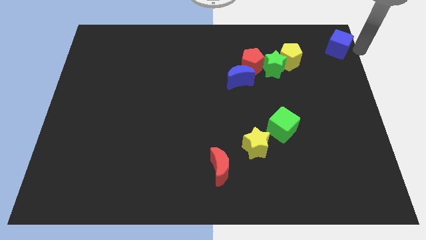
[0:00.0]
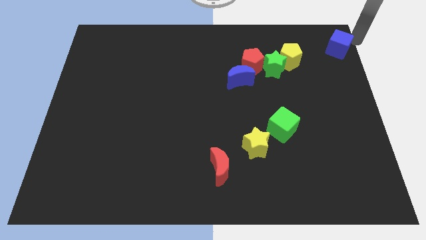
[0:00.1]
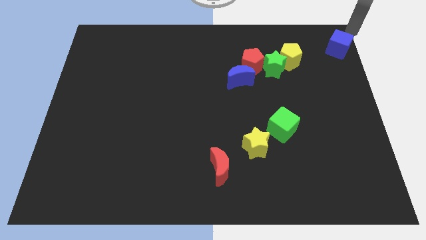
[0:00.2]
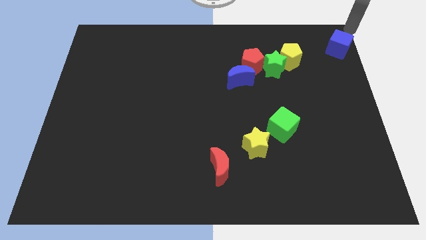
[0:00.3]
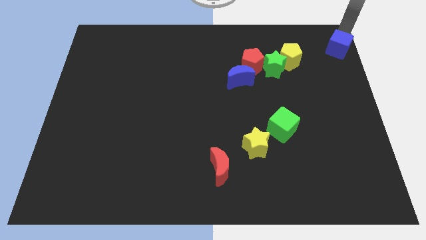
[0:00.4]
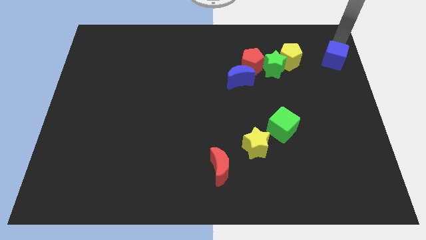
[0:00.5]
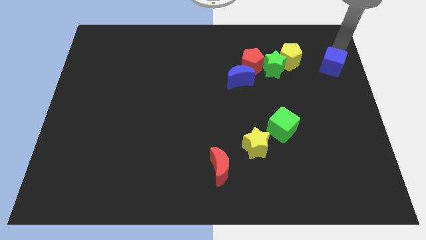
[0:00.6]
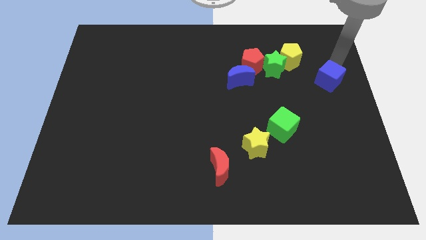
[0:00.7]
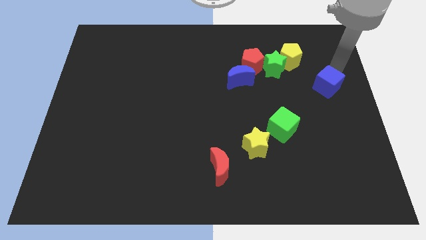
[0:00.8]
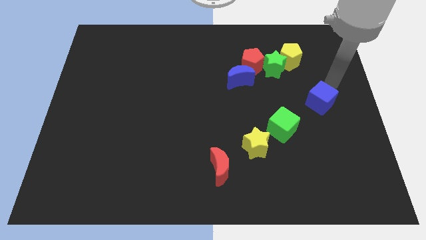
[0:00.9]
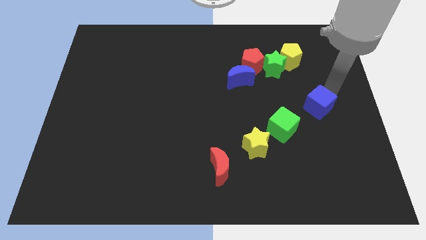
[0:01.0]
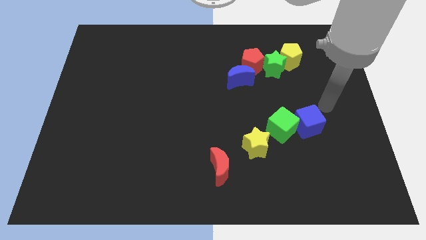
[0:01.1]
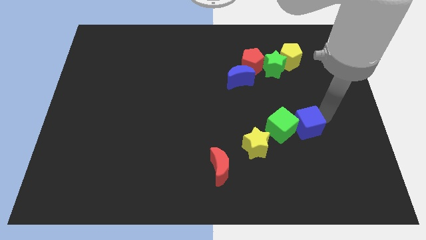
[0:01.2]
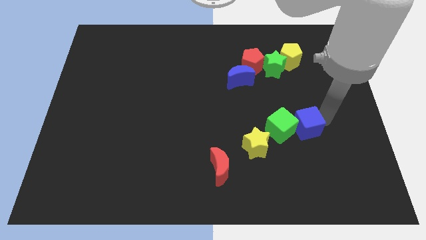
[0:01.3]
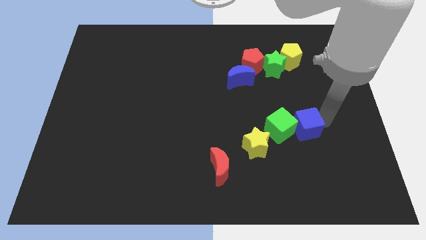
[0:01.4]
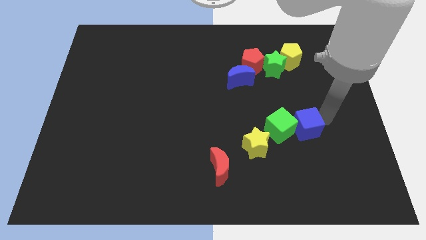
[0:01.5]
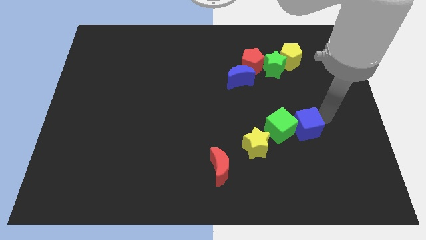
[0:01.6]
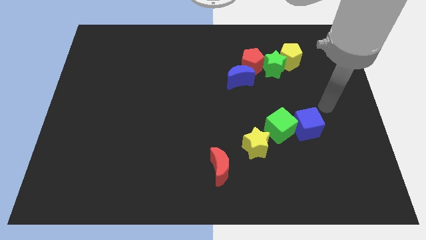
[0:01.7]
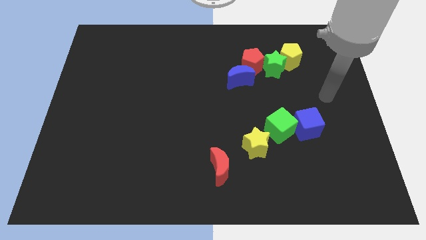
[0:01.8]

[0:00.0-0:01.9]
put the blue cube into the green cube

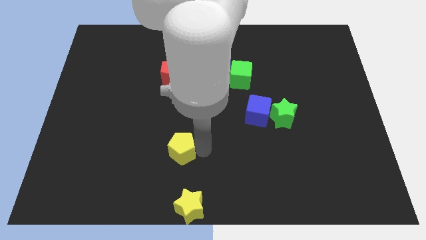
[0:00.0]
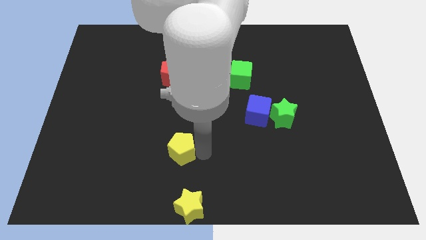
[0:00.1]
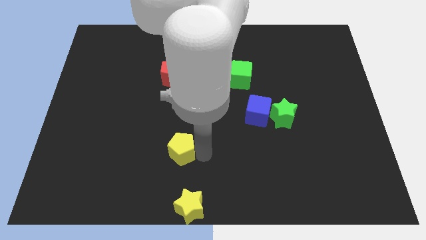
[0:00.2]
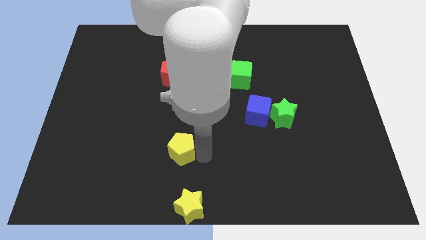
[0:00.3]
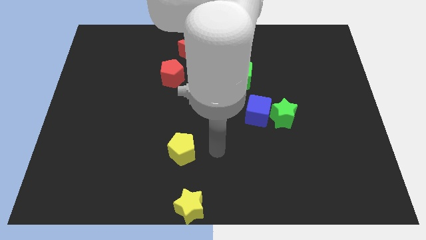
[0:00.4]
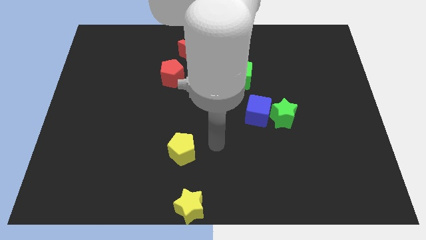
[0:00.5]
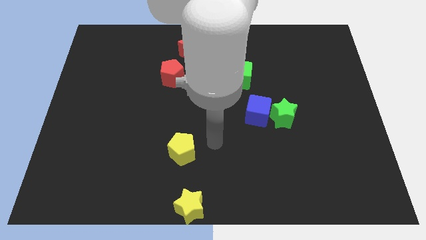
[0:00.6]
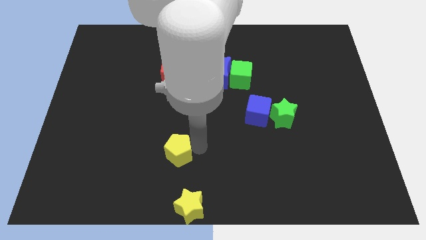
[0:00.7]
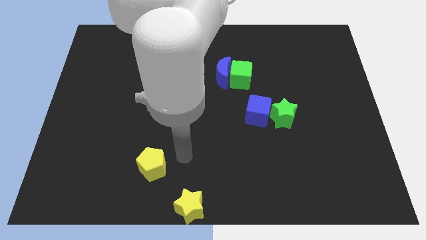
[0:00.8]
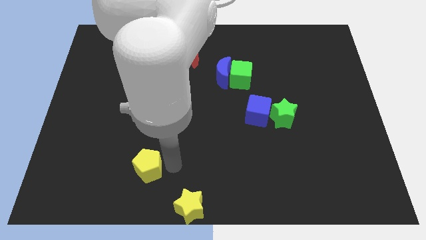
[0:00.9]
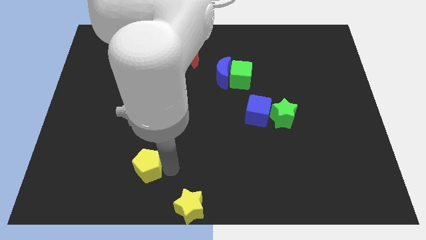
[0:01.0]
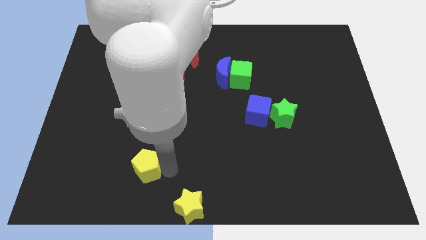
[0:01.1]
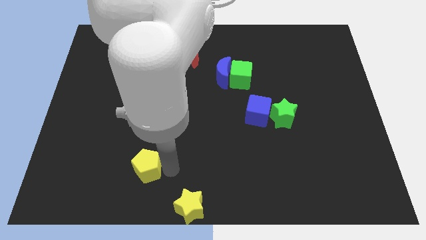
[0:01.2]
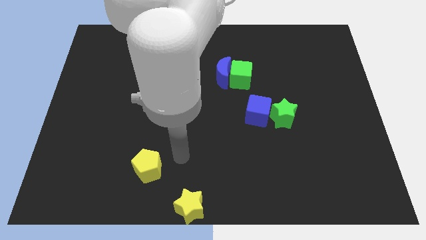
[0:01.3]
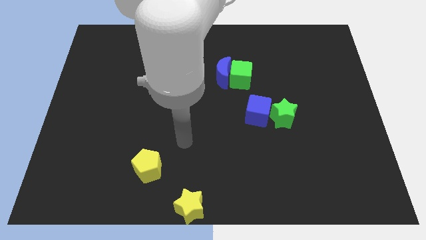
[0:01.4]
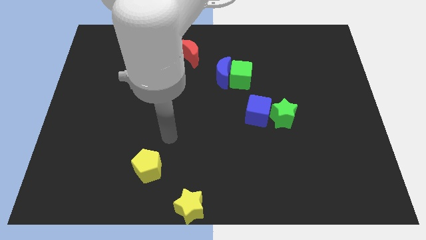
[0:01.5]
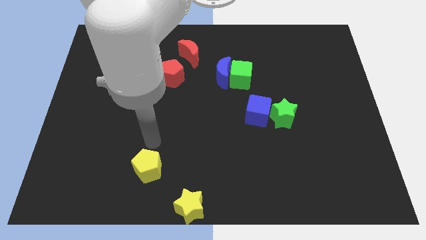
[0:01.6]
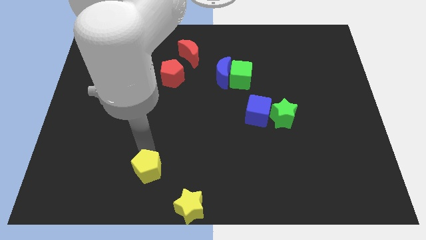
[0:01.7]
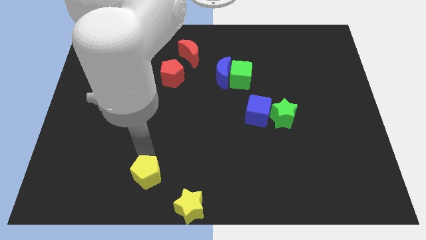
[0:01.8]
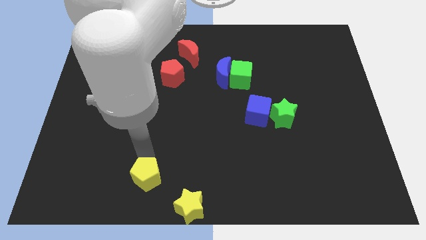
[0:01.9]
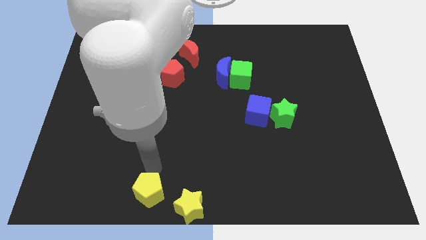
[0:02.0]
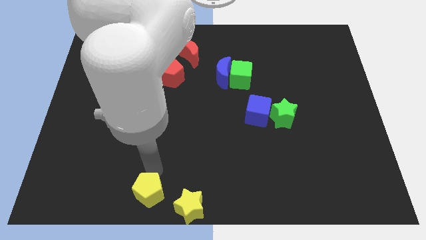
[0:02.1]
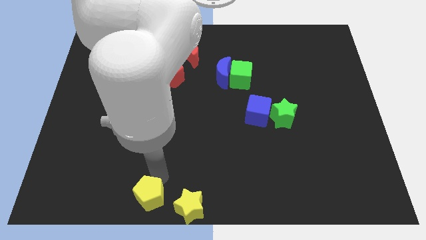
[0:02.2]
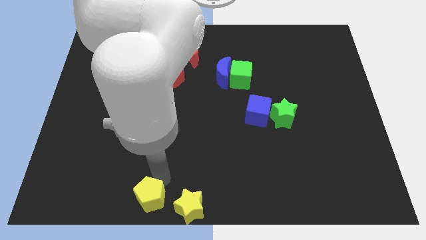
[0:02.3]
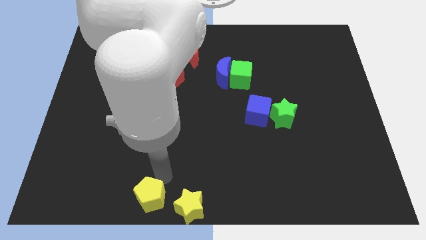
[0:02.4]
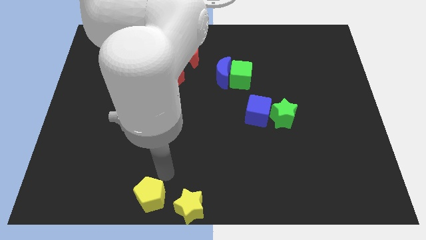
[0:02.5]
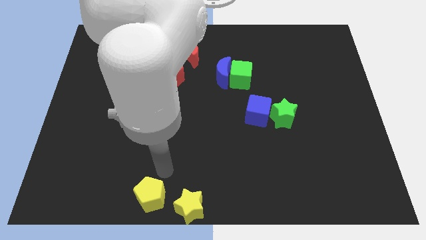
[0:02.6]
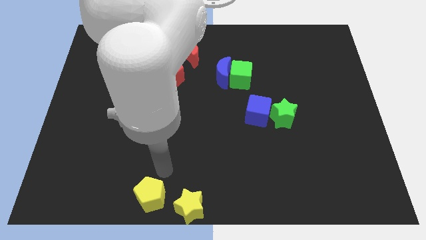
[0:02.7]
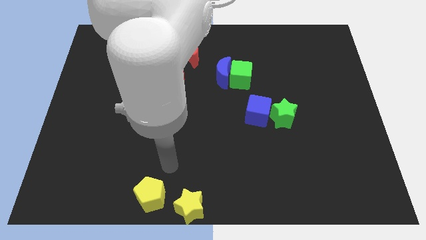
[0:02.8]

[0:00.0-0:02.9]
slide the yellow pentagon to the left side of the yellow star

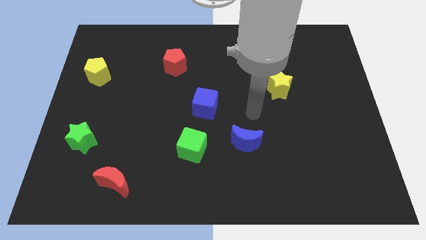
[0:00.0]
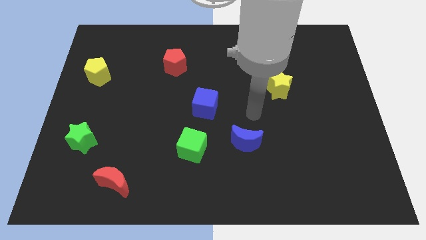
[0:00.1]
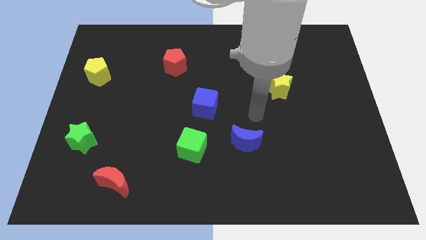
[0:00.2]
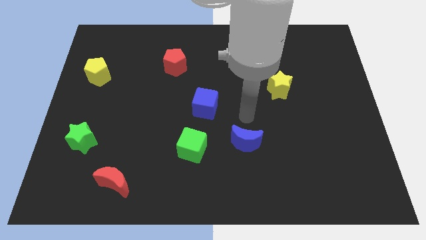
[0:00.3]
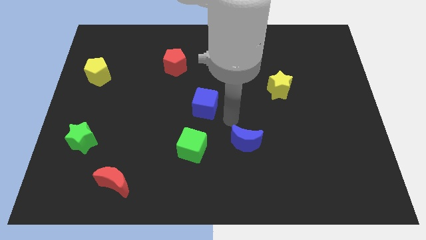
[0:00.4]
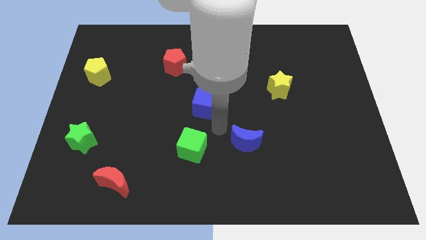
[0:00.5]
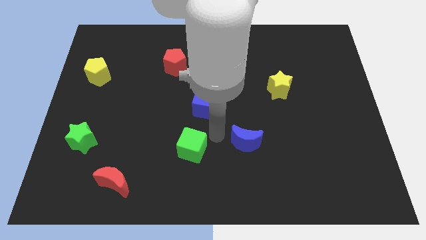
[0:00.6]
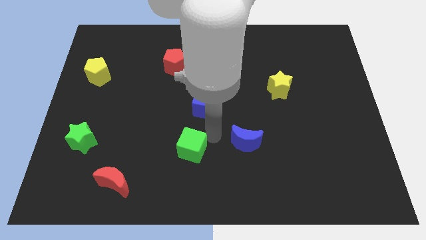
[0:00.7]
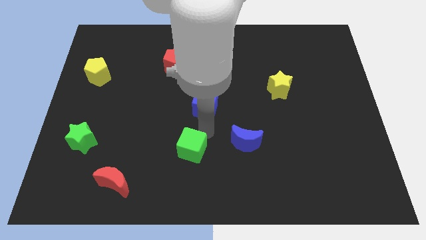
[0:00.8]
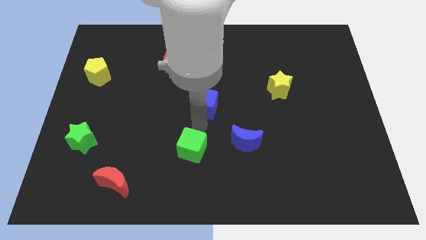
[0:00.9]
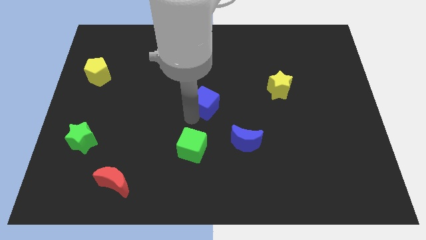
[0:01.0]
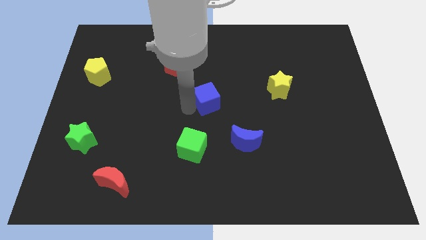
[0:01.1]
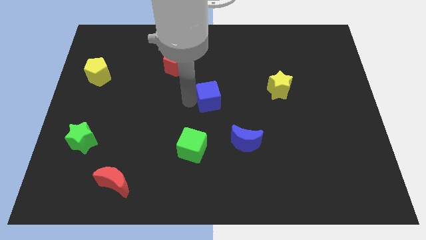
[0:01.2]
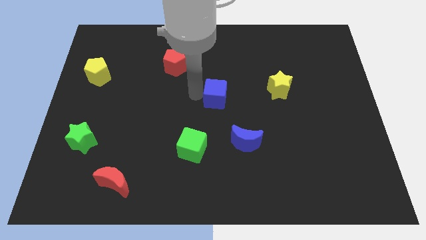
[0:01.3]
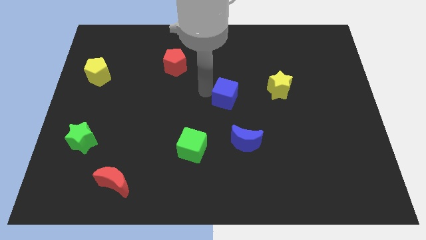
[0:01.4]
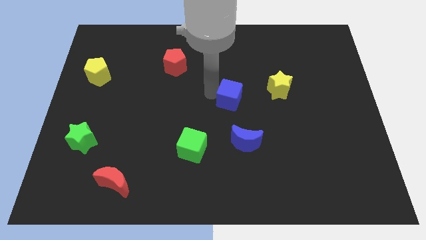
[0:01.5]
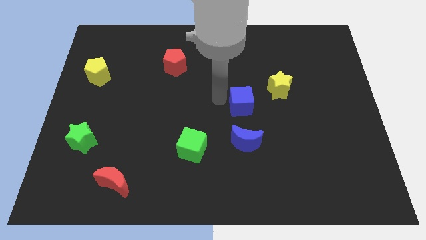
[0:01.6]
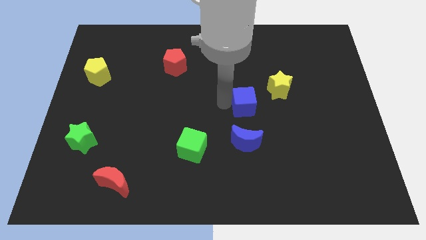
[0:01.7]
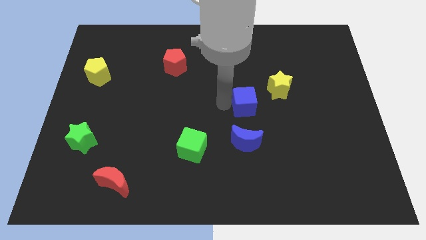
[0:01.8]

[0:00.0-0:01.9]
push the blue cube to the top of the blue moon

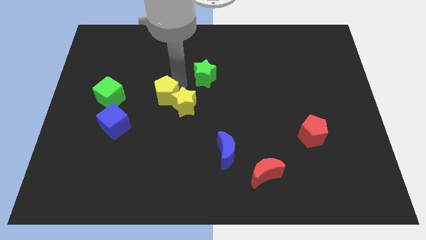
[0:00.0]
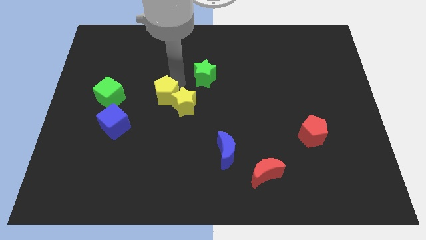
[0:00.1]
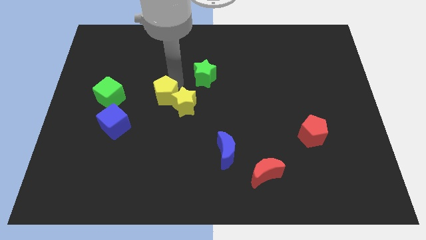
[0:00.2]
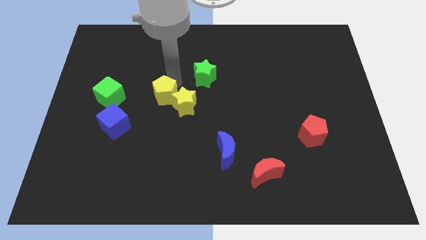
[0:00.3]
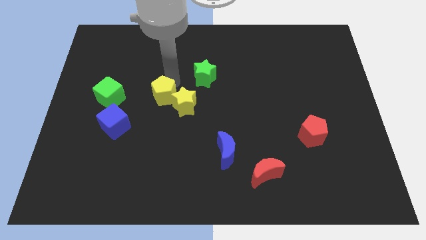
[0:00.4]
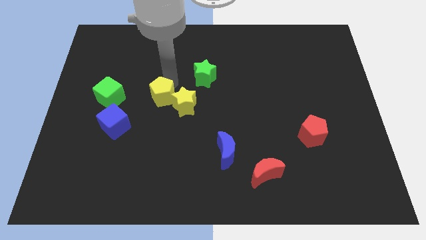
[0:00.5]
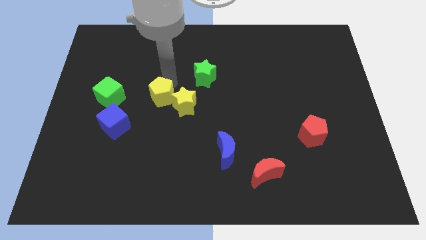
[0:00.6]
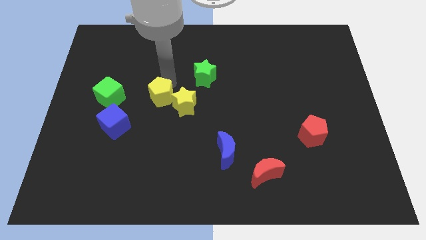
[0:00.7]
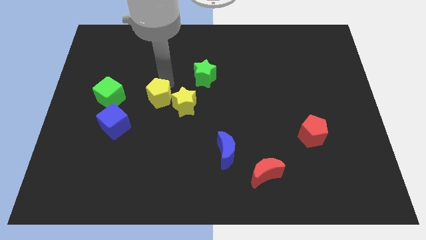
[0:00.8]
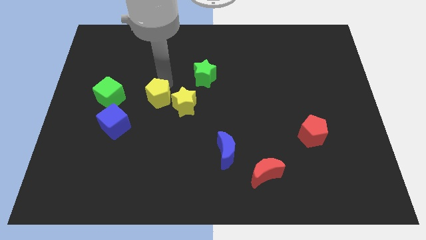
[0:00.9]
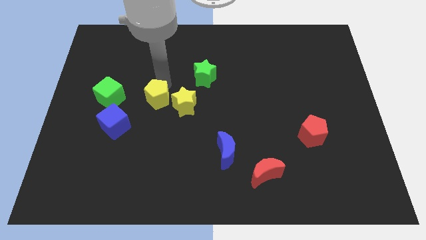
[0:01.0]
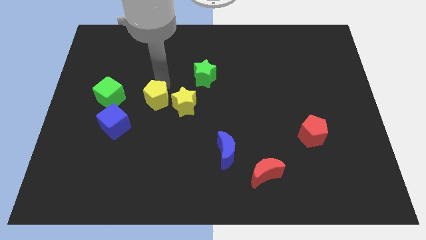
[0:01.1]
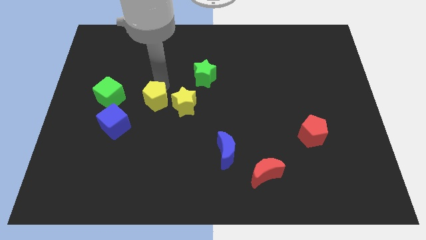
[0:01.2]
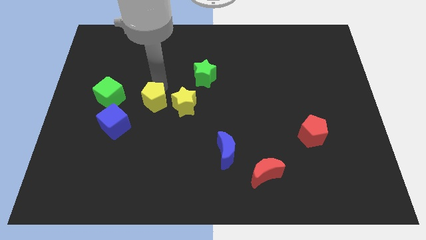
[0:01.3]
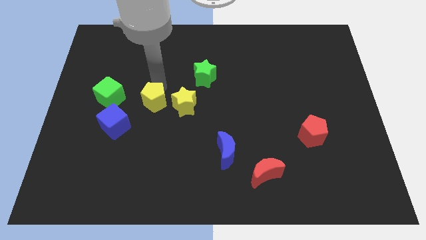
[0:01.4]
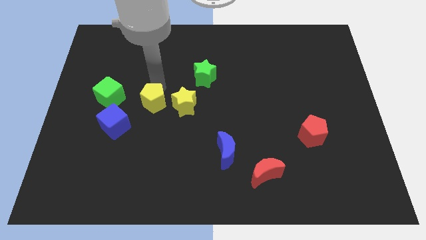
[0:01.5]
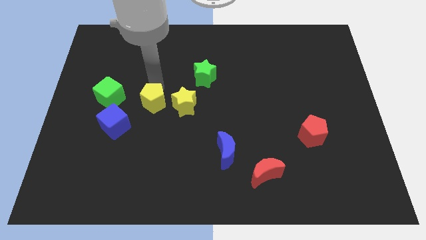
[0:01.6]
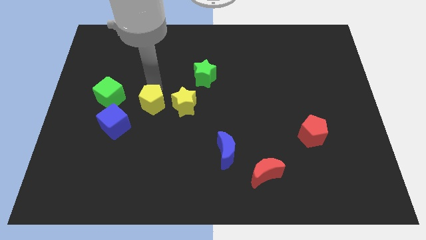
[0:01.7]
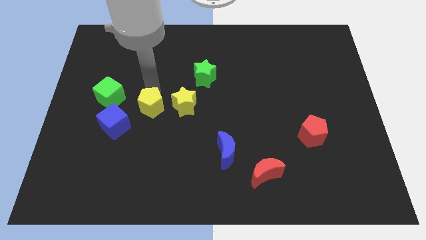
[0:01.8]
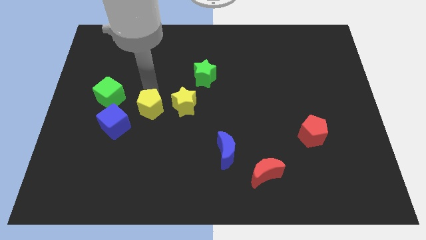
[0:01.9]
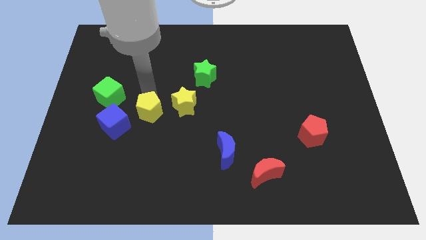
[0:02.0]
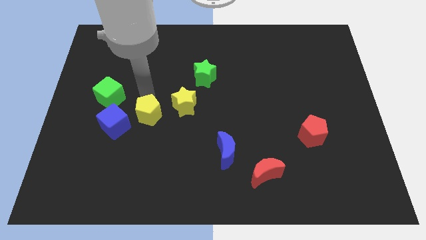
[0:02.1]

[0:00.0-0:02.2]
separate the yellow pentagon from the yellow star
